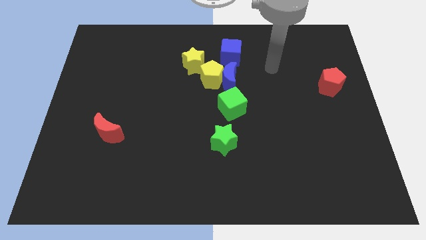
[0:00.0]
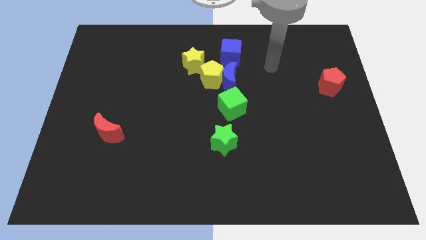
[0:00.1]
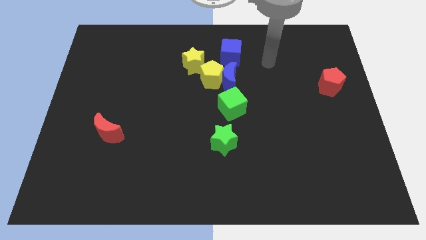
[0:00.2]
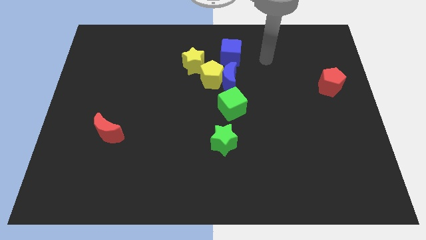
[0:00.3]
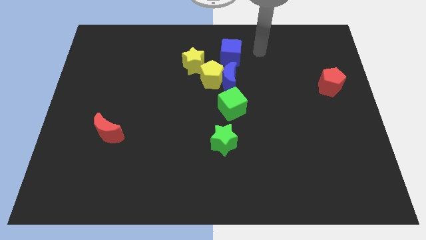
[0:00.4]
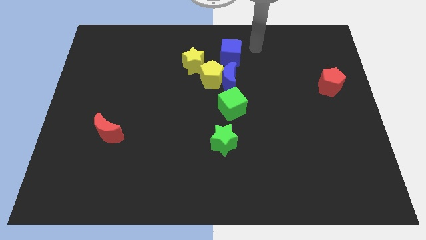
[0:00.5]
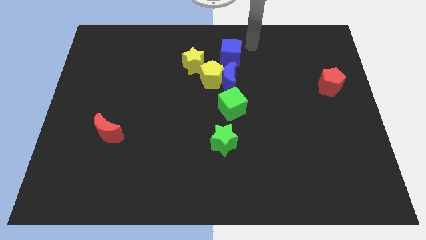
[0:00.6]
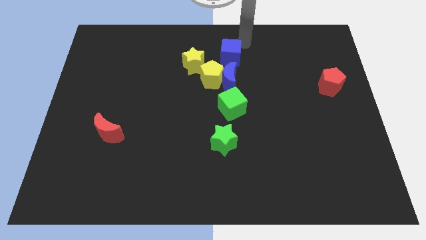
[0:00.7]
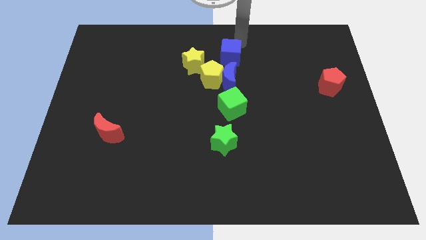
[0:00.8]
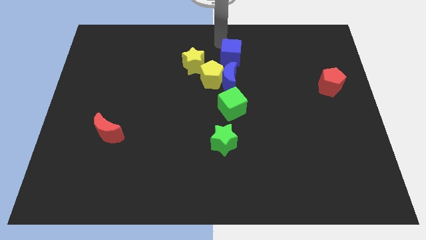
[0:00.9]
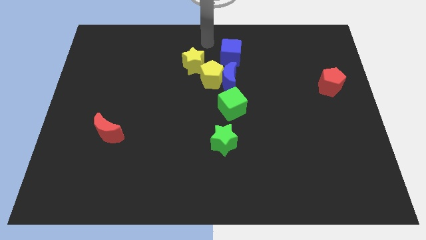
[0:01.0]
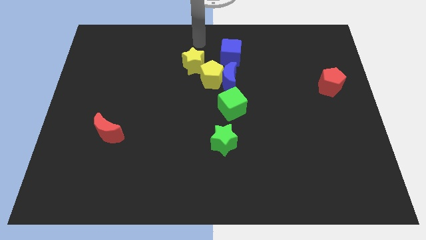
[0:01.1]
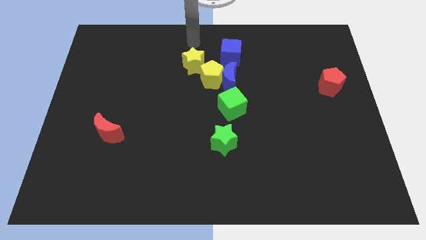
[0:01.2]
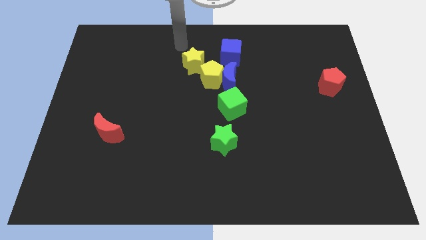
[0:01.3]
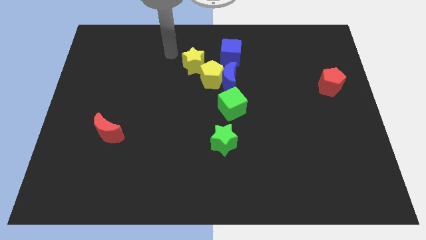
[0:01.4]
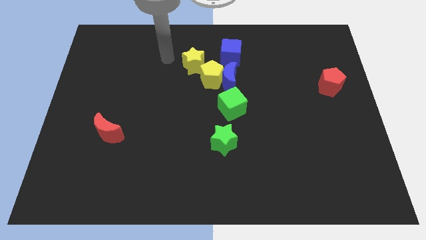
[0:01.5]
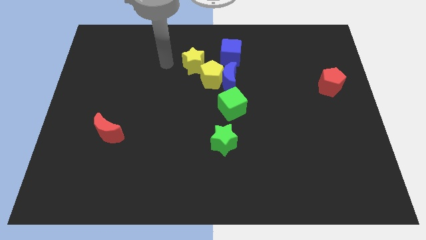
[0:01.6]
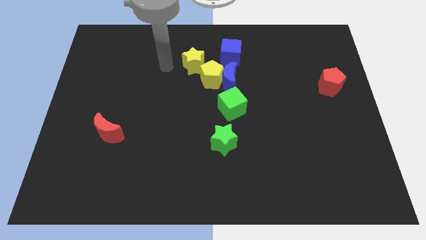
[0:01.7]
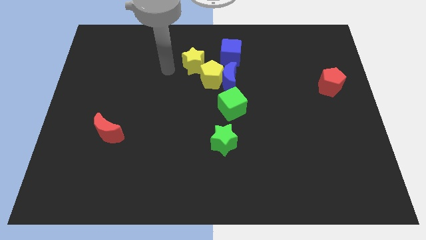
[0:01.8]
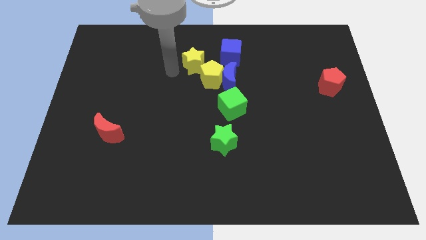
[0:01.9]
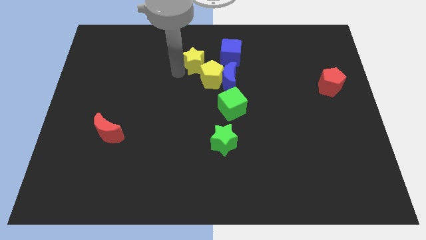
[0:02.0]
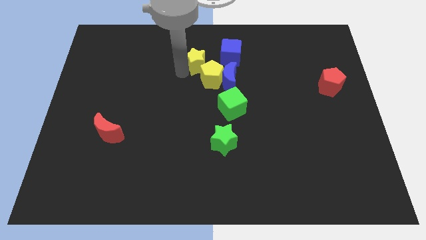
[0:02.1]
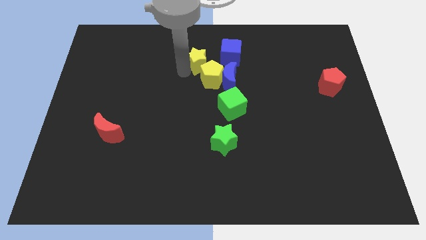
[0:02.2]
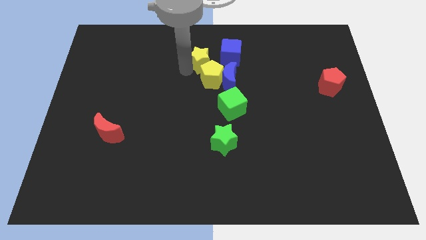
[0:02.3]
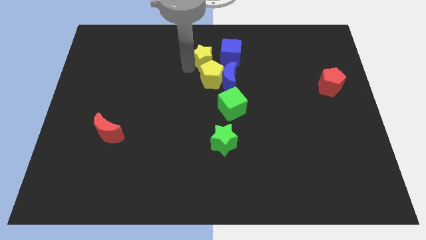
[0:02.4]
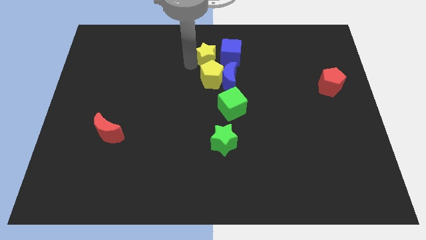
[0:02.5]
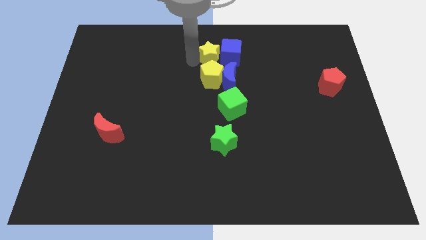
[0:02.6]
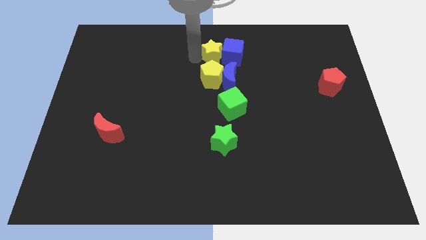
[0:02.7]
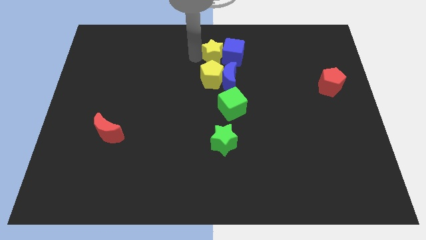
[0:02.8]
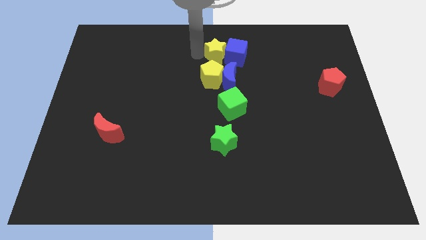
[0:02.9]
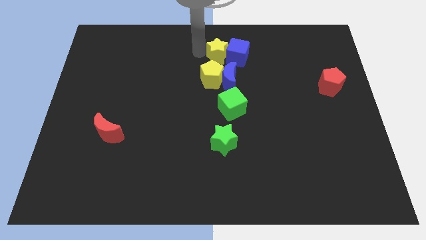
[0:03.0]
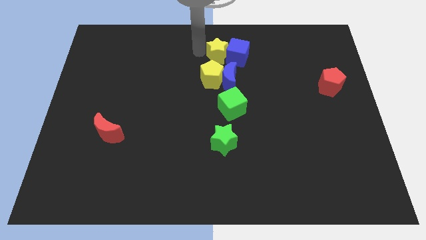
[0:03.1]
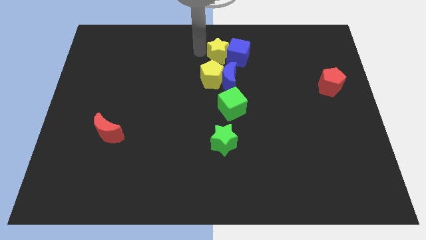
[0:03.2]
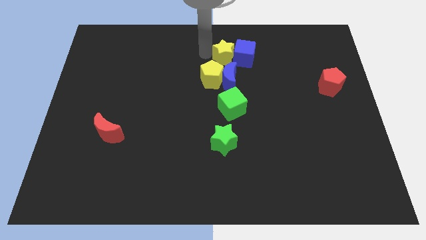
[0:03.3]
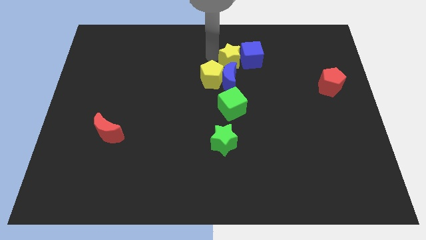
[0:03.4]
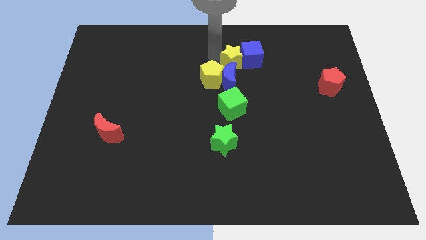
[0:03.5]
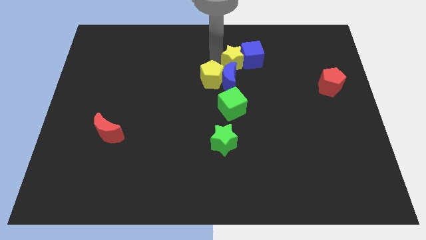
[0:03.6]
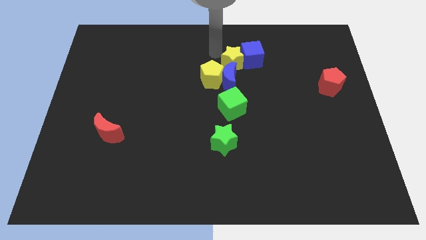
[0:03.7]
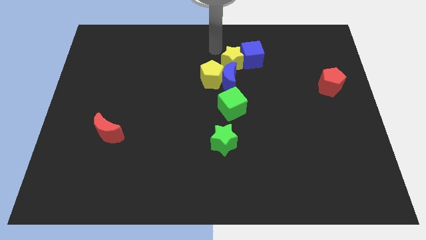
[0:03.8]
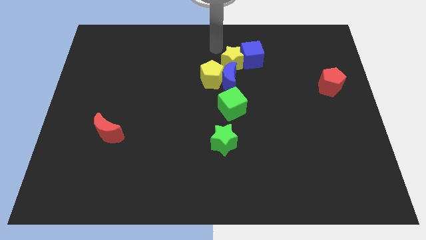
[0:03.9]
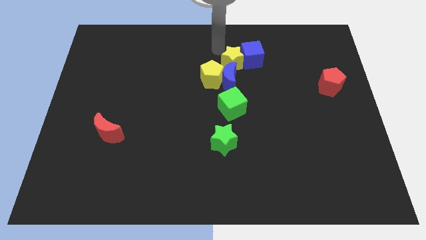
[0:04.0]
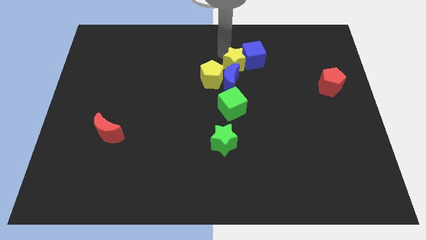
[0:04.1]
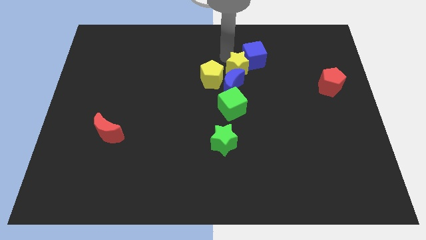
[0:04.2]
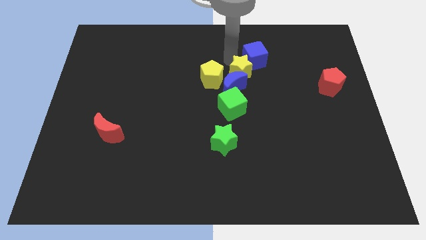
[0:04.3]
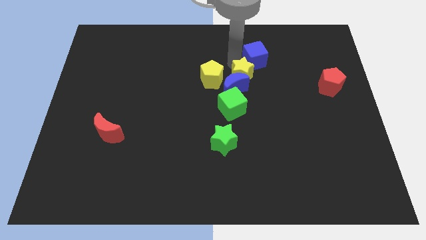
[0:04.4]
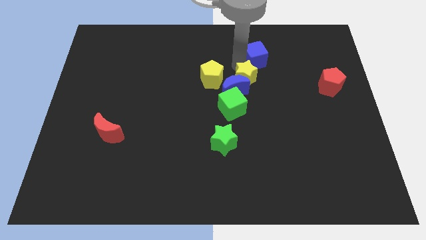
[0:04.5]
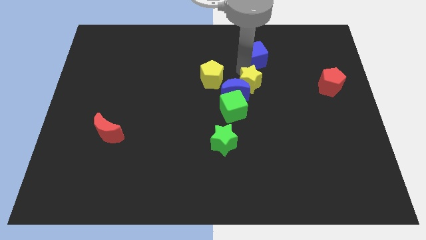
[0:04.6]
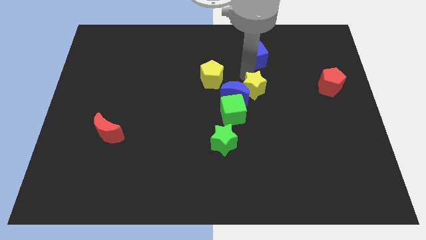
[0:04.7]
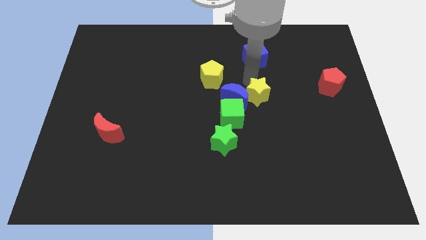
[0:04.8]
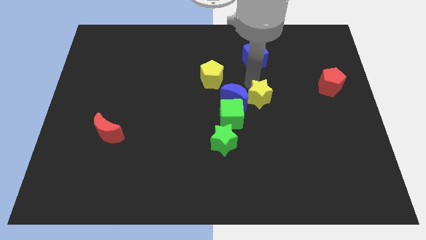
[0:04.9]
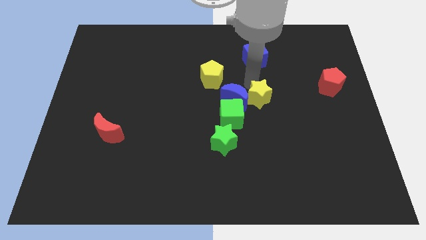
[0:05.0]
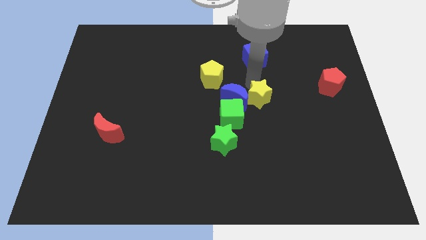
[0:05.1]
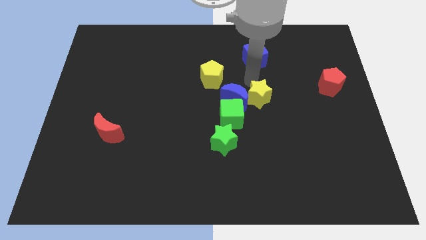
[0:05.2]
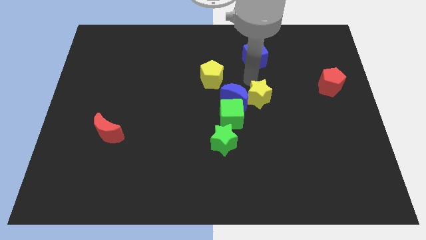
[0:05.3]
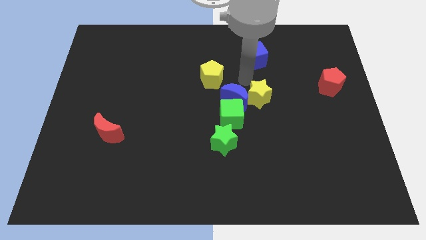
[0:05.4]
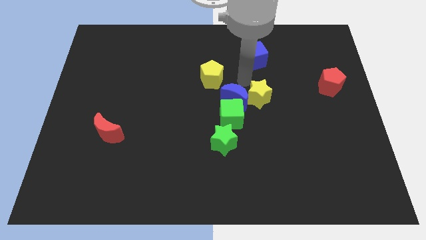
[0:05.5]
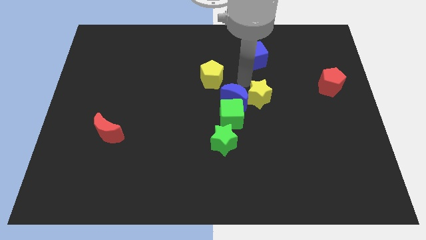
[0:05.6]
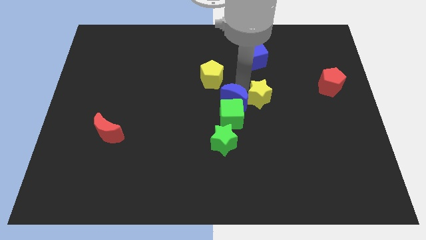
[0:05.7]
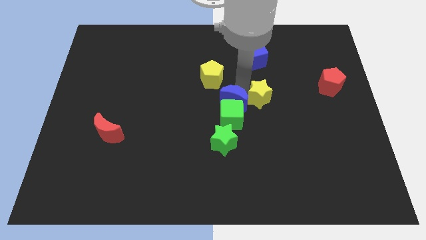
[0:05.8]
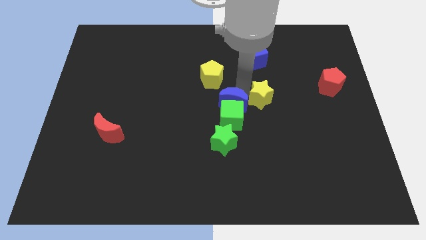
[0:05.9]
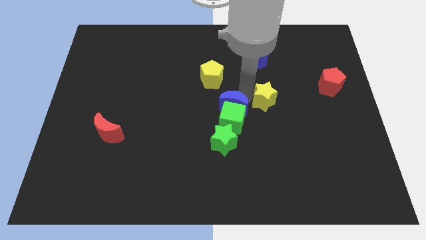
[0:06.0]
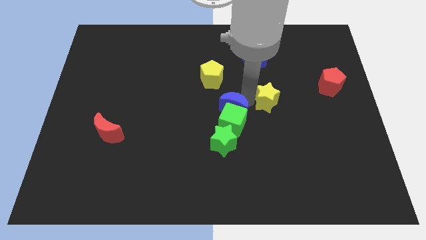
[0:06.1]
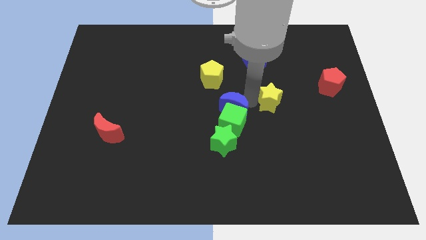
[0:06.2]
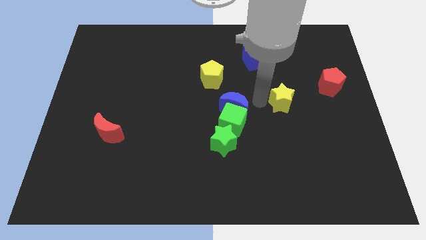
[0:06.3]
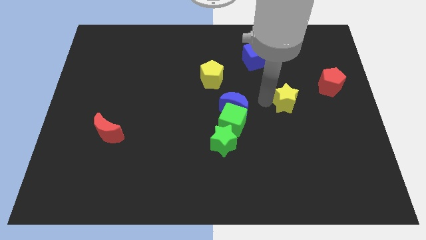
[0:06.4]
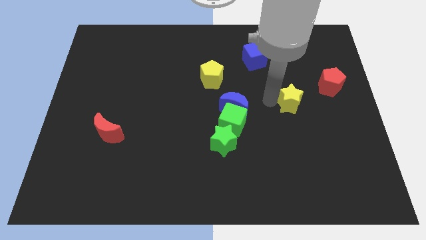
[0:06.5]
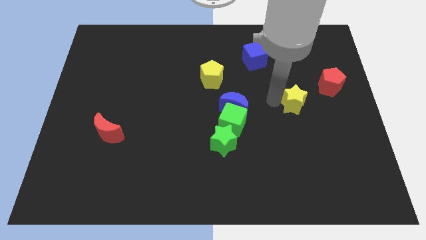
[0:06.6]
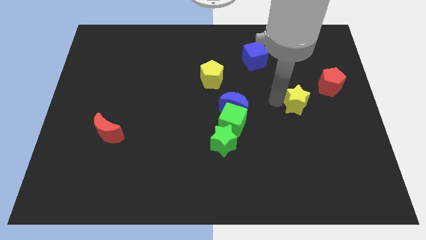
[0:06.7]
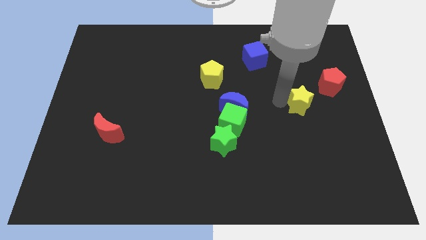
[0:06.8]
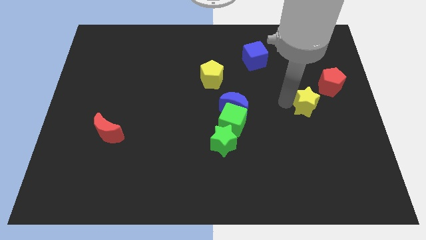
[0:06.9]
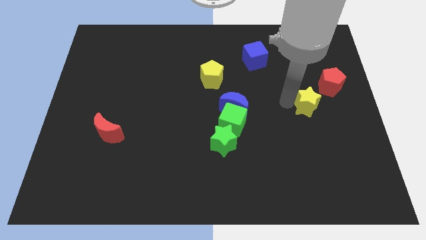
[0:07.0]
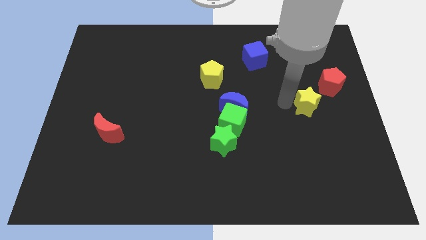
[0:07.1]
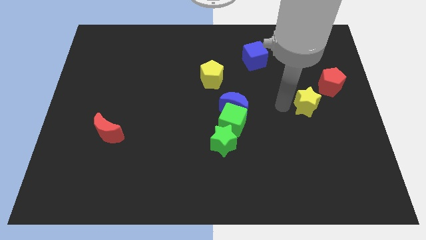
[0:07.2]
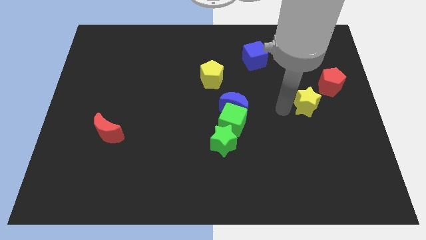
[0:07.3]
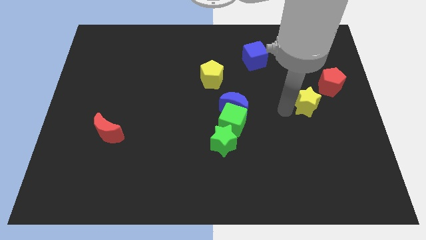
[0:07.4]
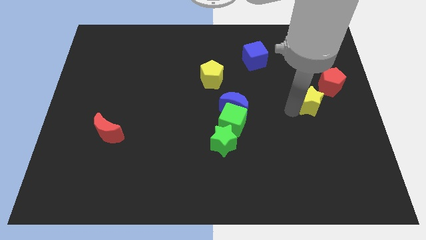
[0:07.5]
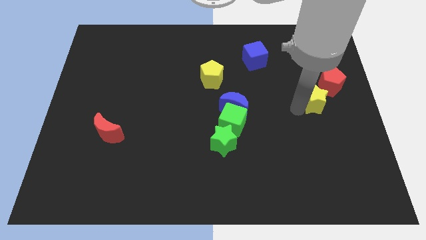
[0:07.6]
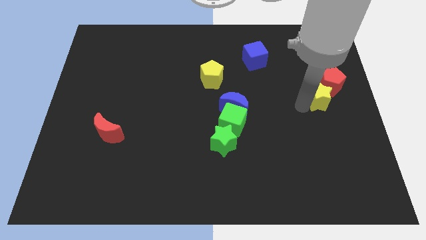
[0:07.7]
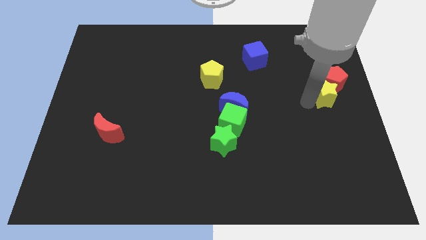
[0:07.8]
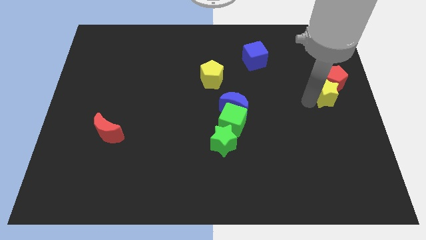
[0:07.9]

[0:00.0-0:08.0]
move the yellow star to the red pentagon

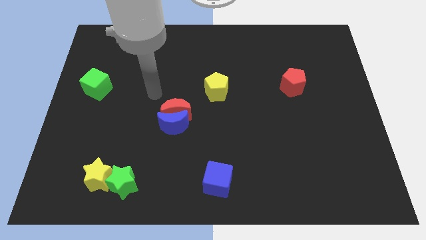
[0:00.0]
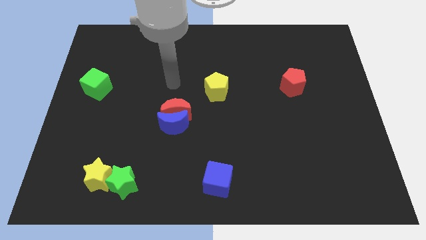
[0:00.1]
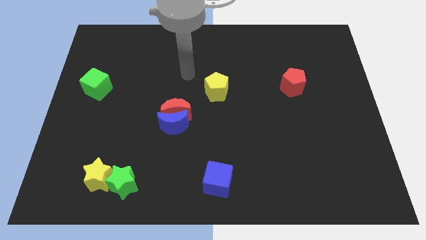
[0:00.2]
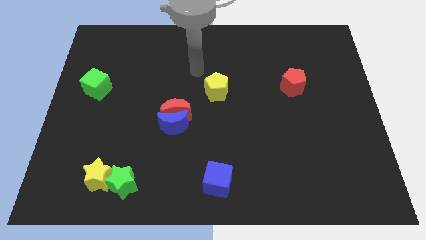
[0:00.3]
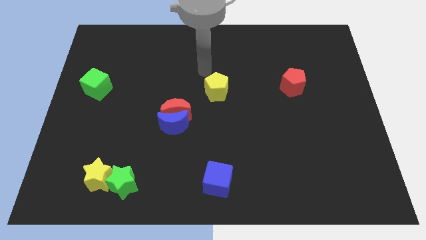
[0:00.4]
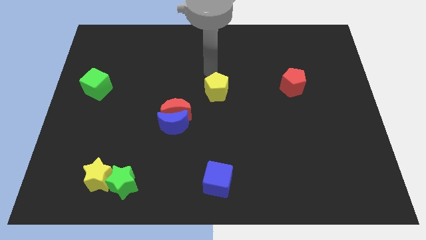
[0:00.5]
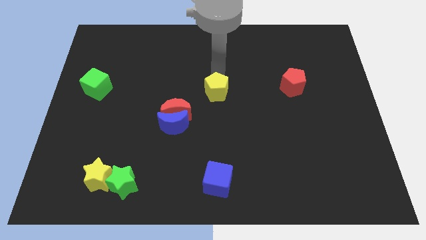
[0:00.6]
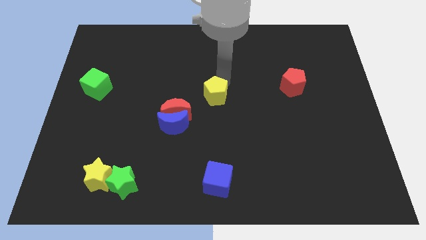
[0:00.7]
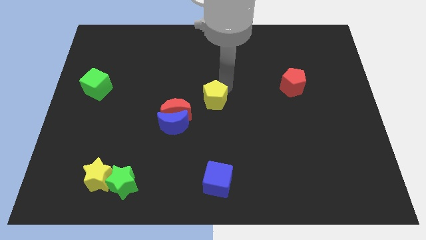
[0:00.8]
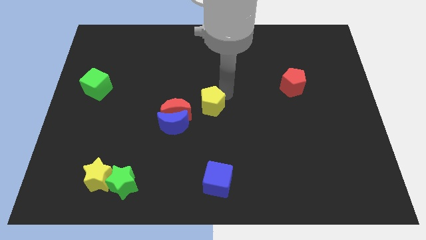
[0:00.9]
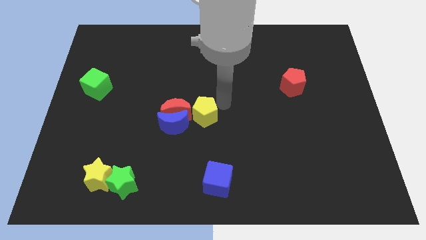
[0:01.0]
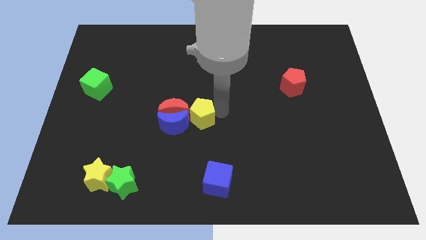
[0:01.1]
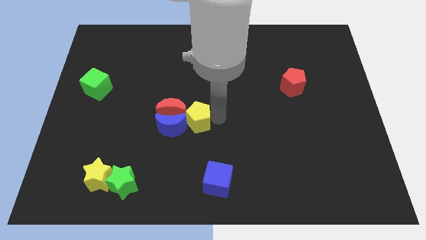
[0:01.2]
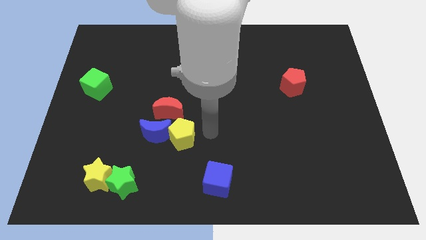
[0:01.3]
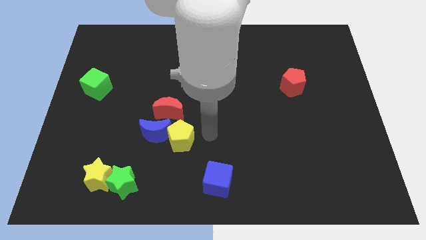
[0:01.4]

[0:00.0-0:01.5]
push the yellow pentagon next to the blue moon
